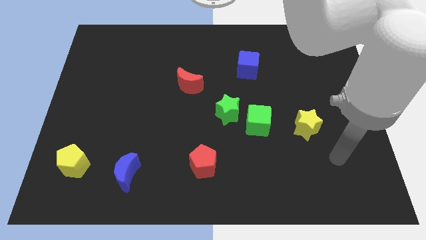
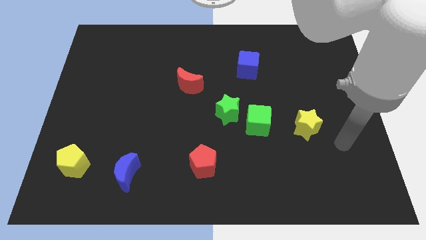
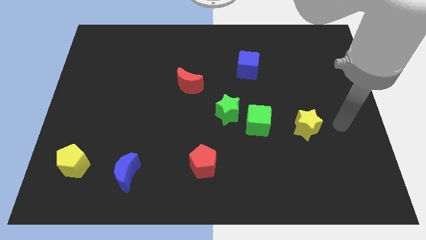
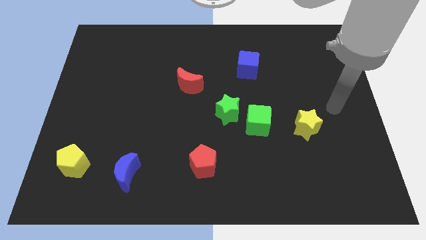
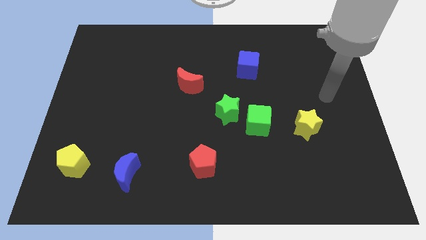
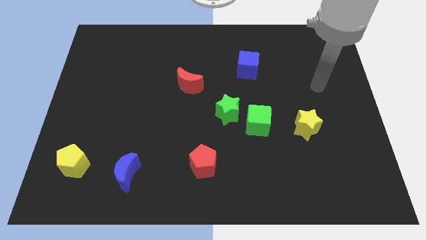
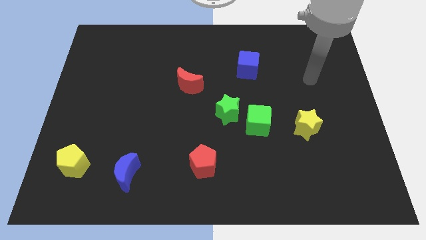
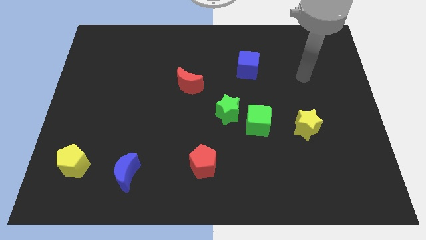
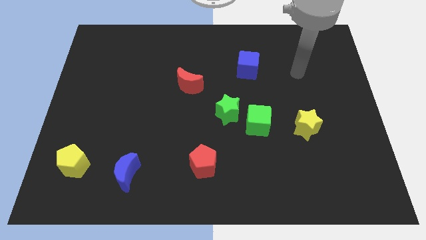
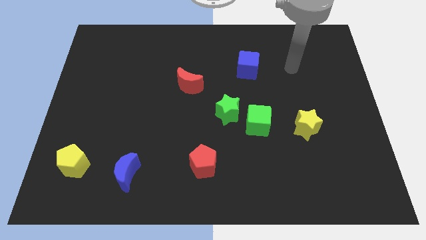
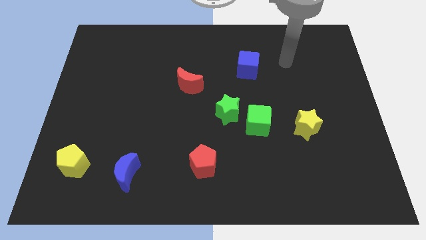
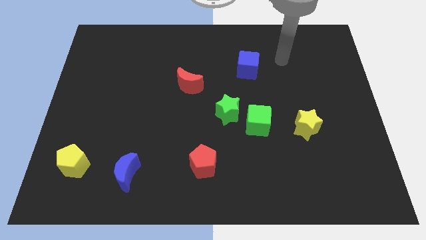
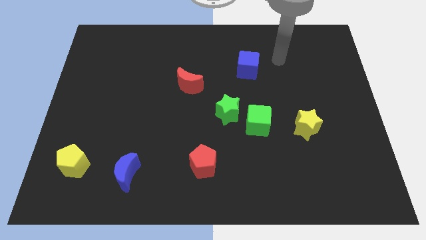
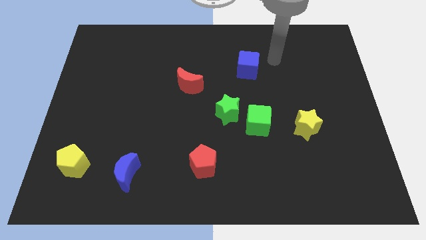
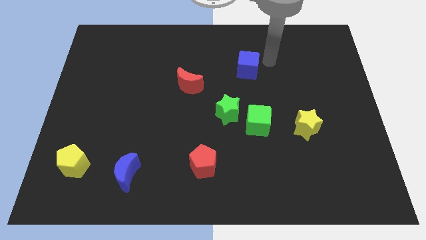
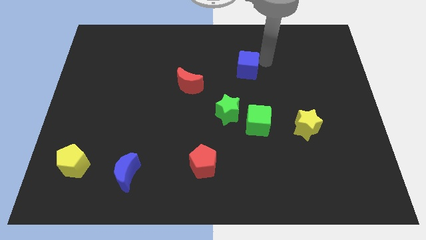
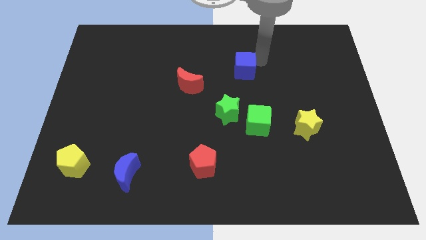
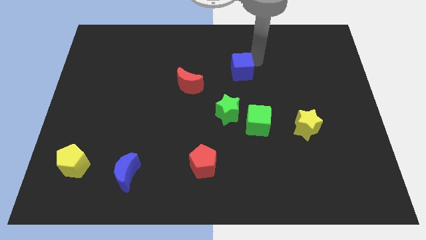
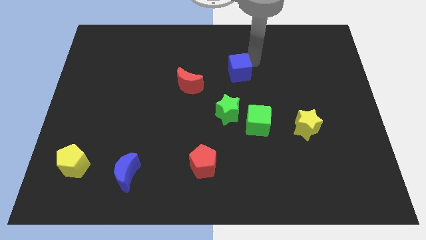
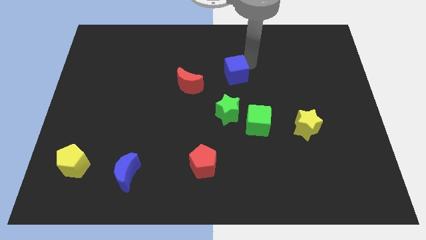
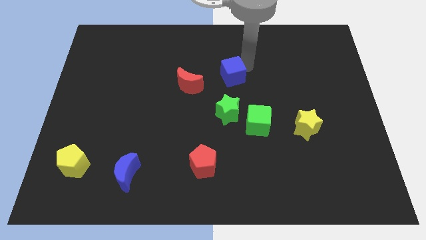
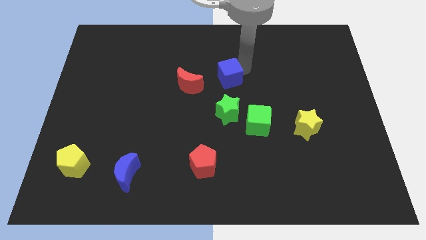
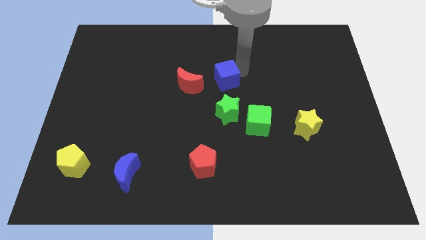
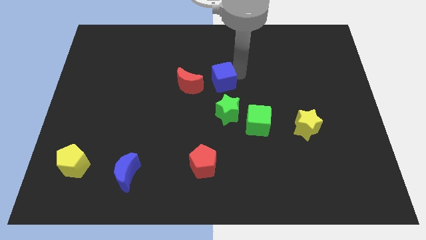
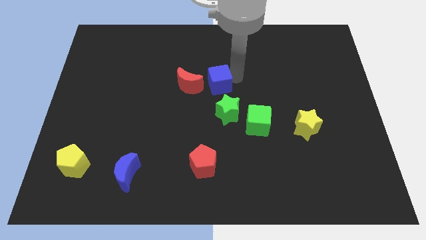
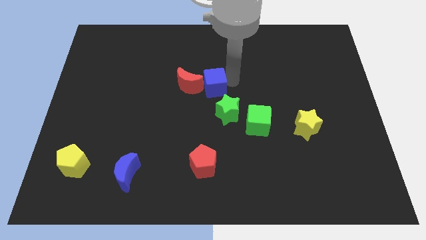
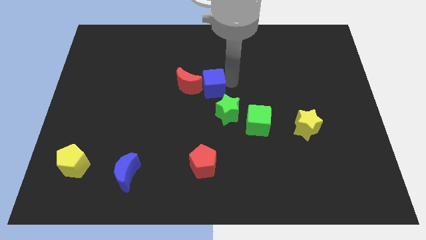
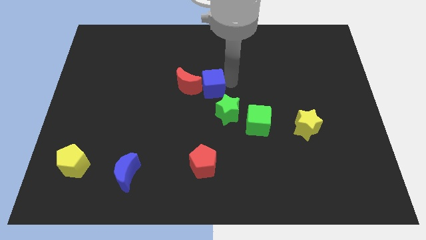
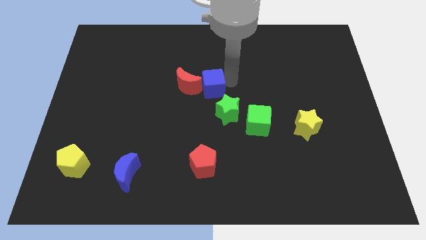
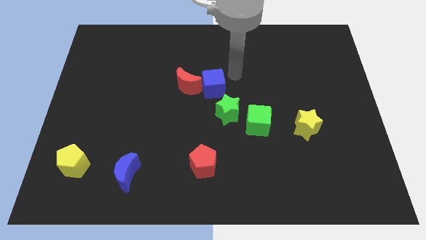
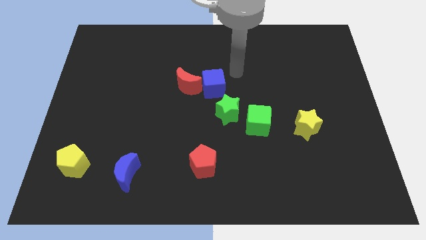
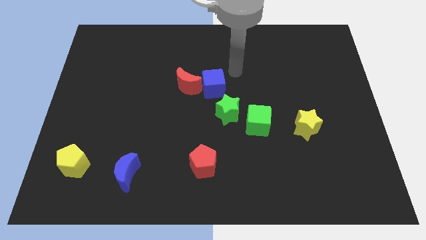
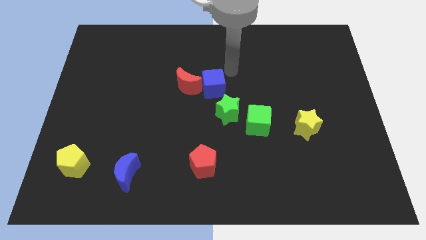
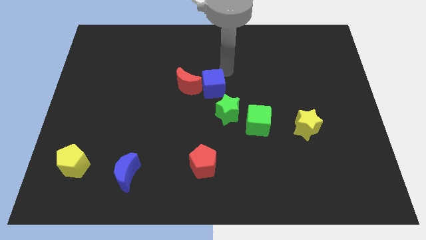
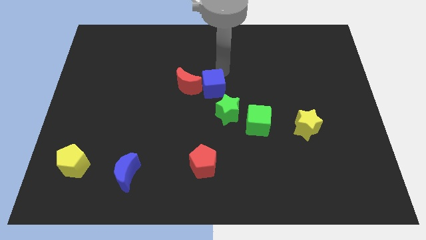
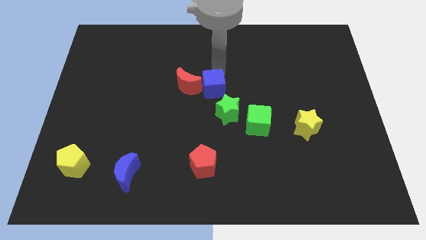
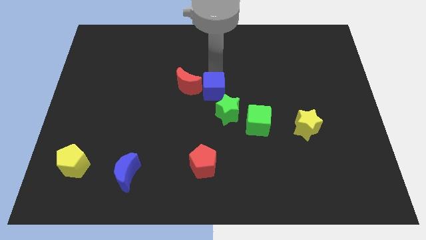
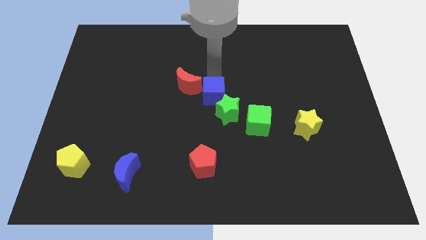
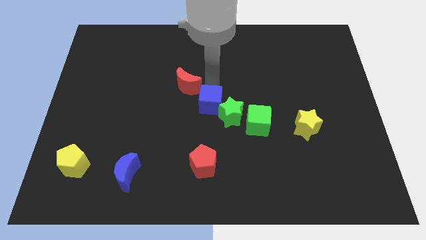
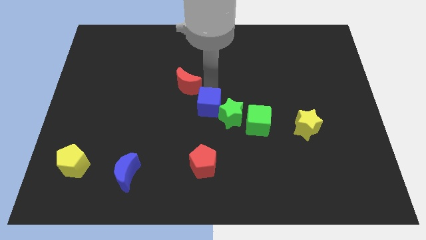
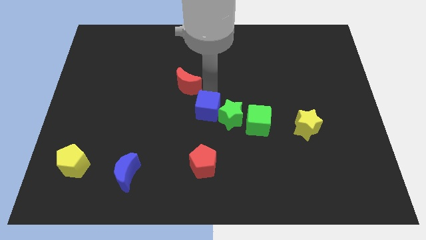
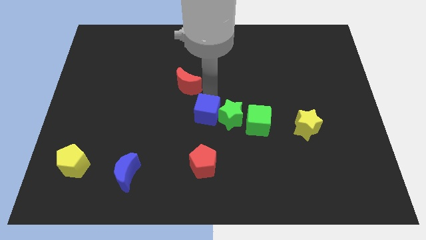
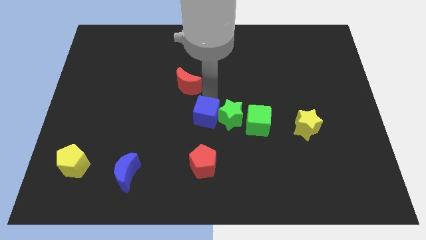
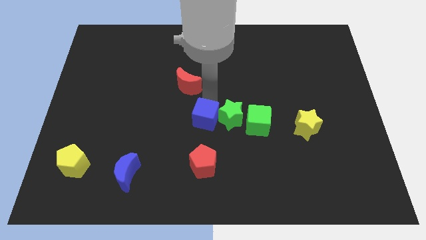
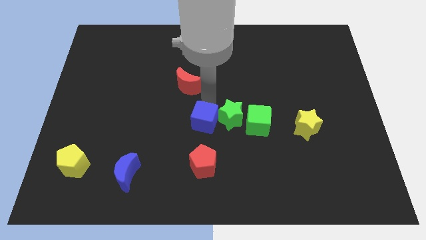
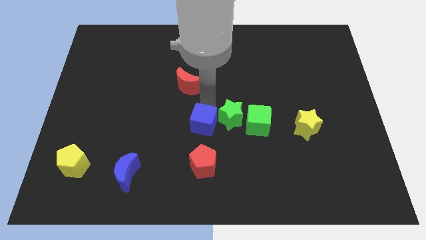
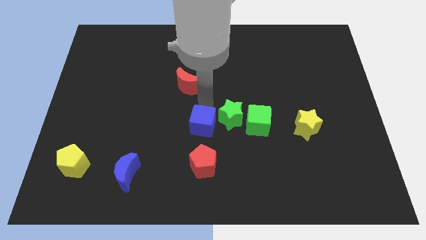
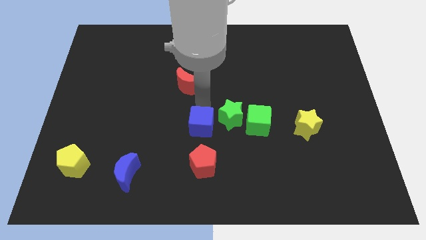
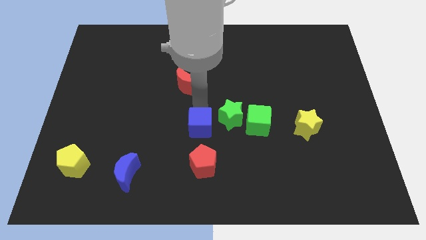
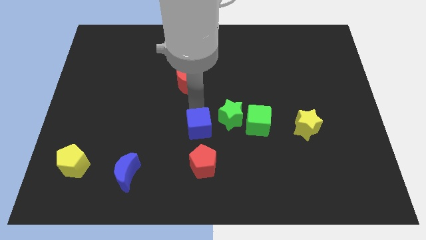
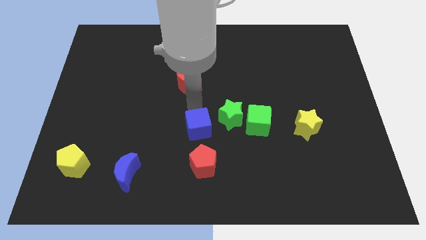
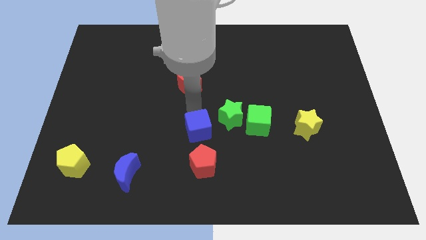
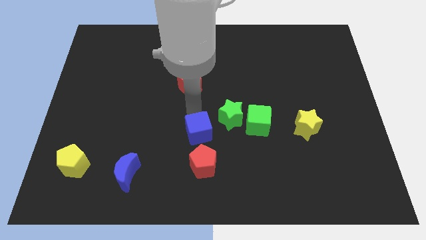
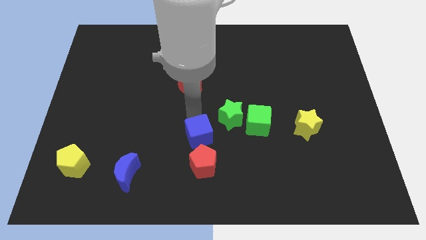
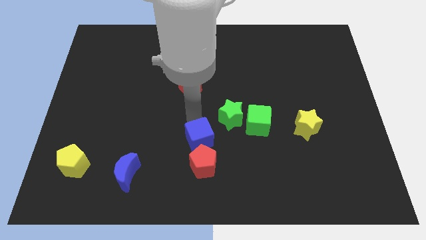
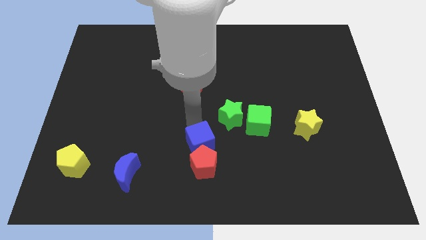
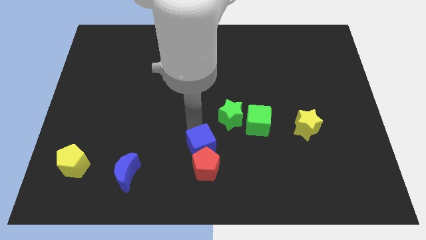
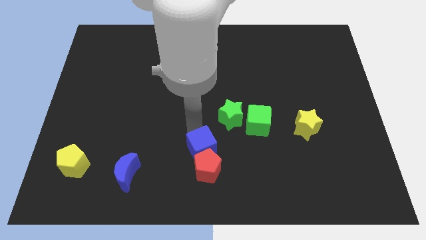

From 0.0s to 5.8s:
move the blue cube to the red pentagon

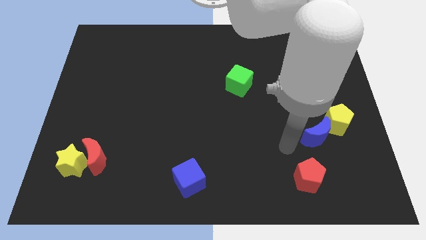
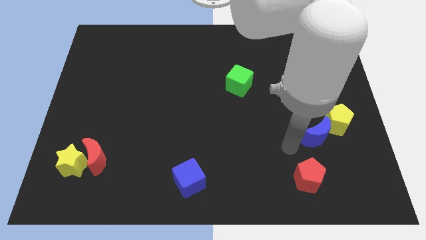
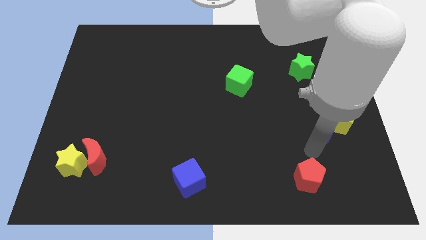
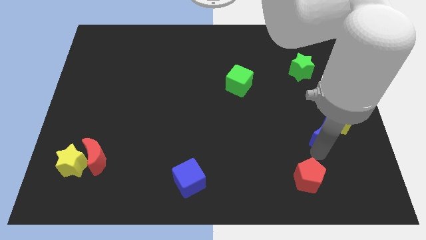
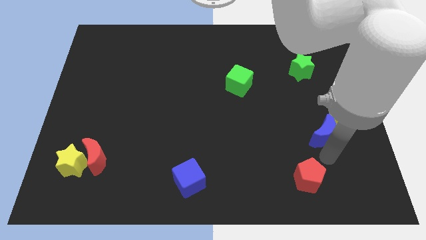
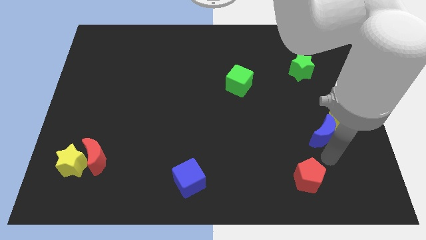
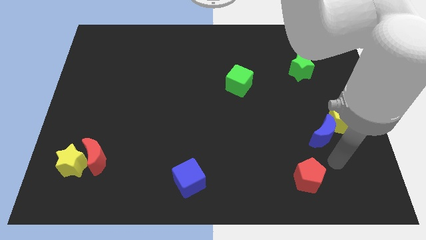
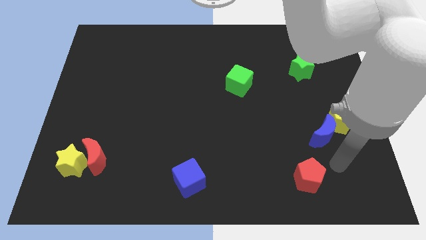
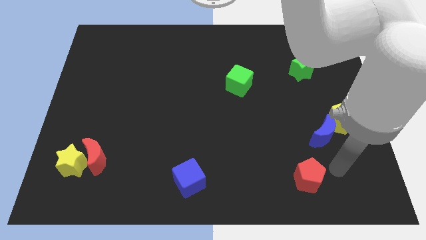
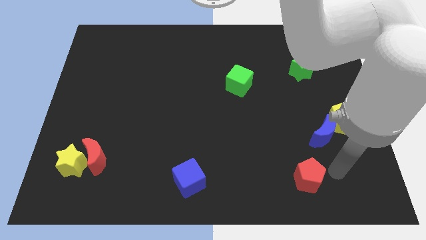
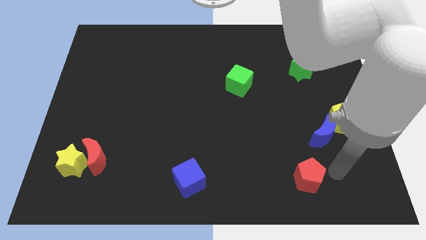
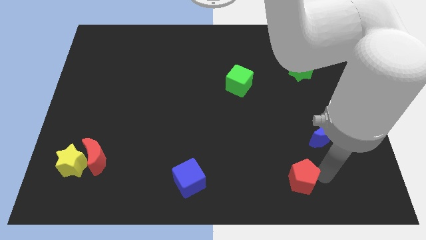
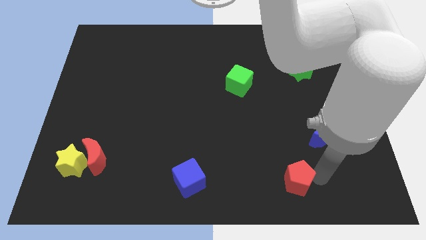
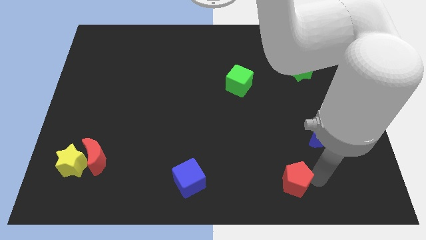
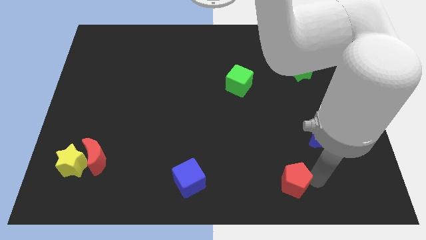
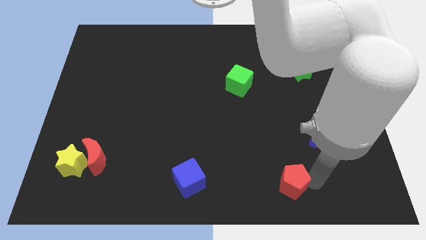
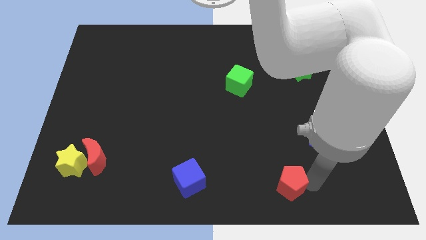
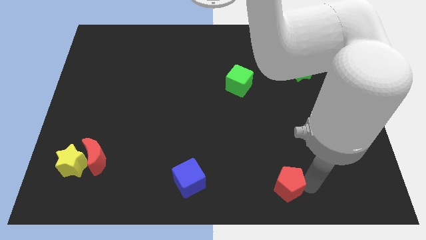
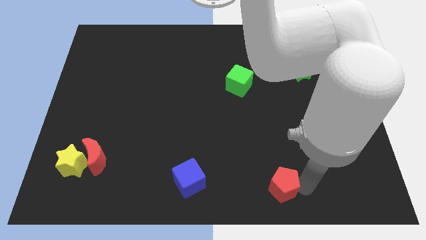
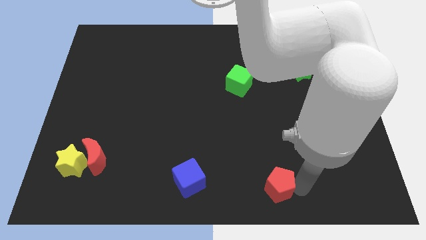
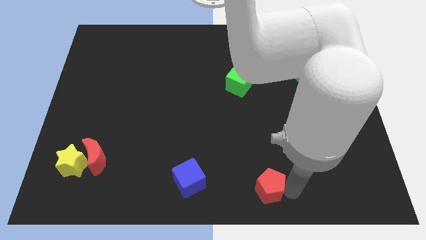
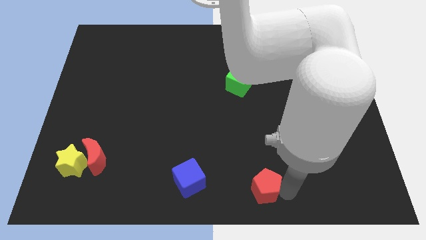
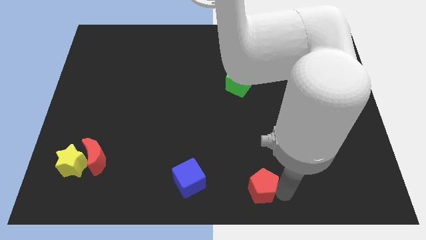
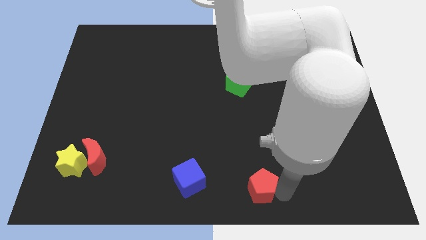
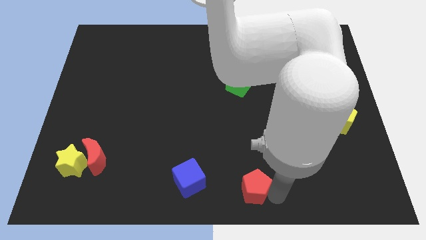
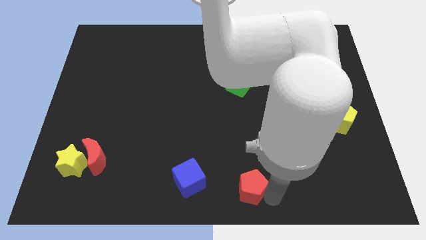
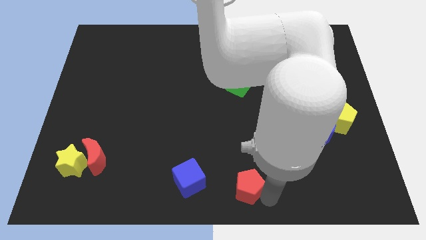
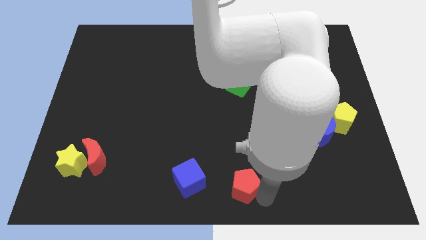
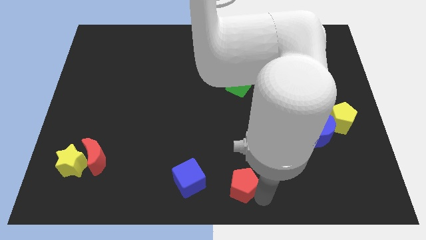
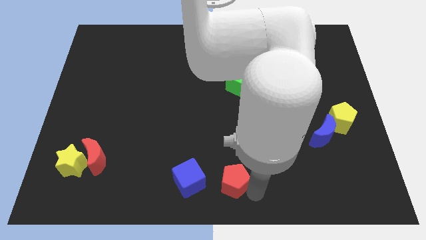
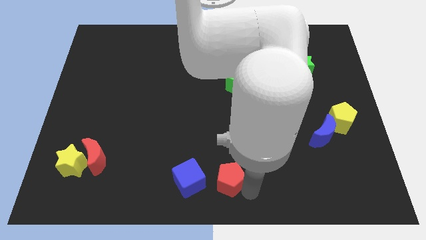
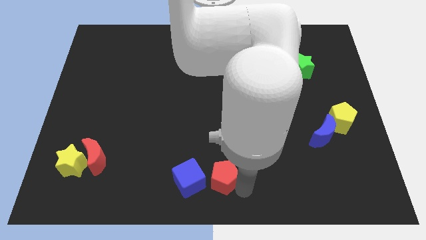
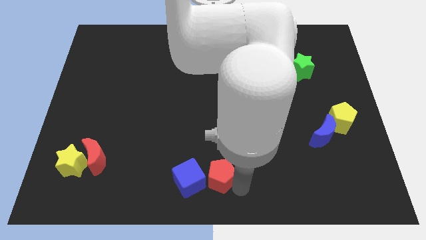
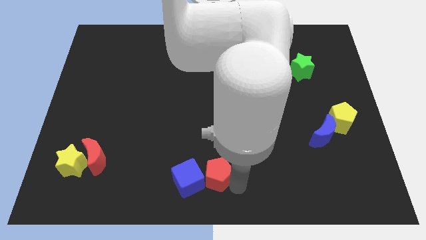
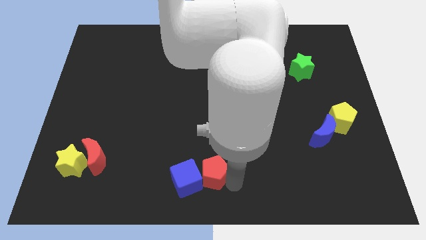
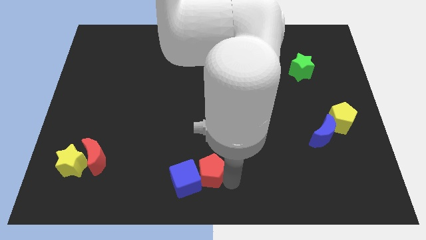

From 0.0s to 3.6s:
push the red pentagon close to the blue cube
